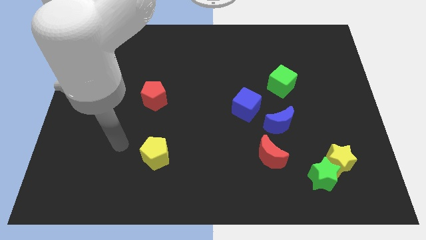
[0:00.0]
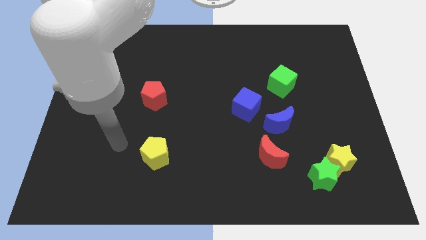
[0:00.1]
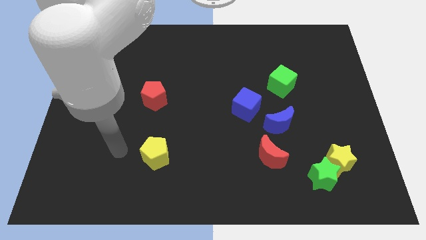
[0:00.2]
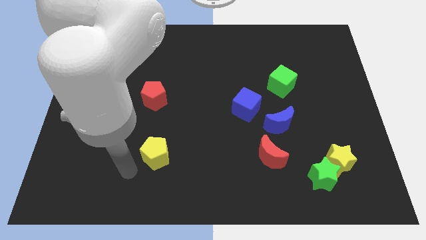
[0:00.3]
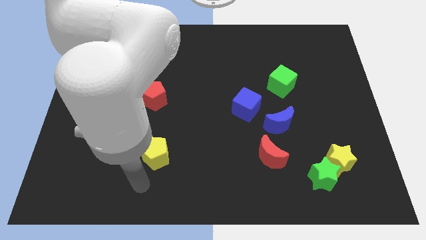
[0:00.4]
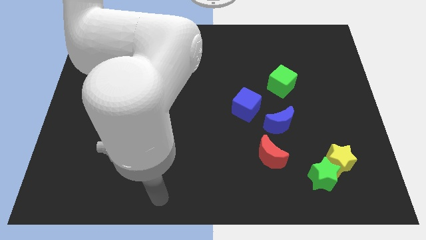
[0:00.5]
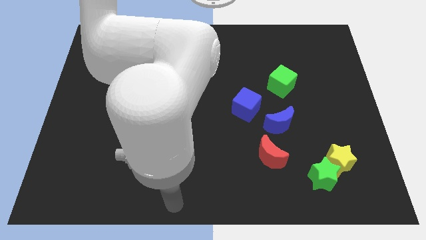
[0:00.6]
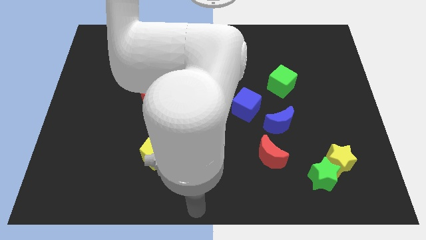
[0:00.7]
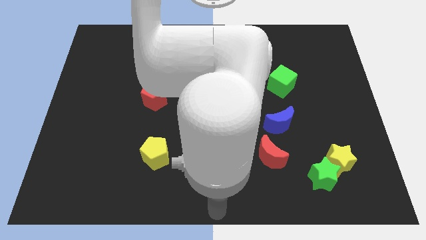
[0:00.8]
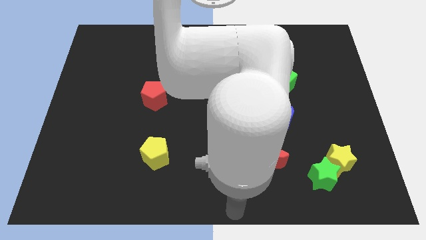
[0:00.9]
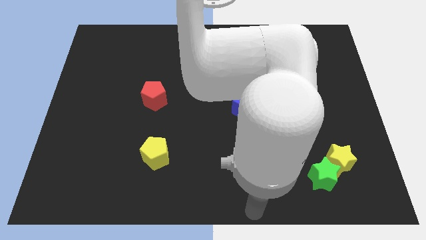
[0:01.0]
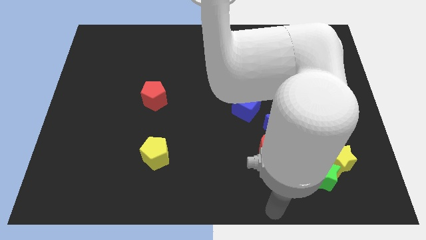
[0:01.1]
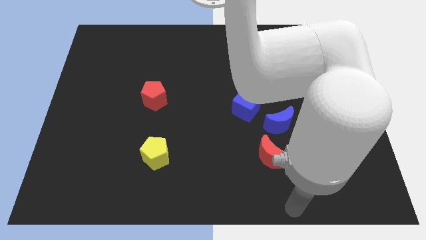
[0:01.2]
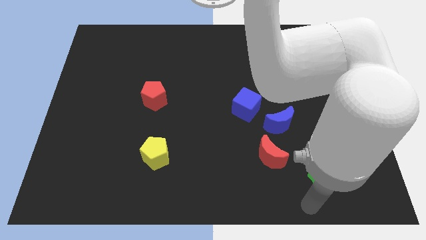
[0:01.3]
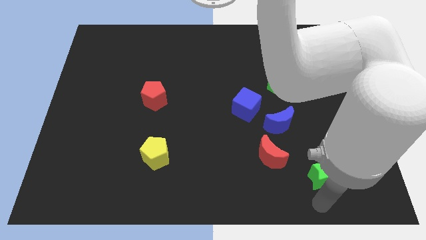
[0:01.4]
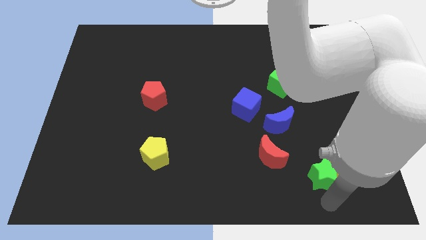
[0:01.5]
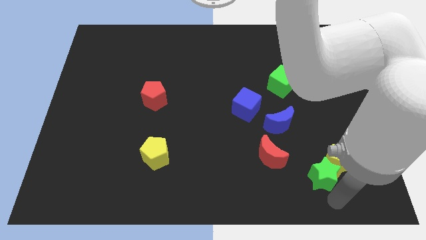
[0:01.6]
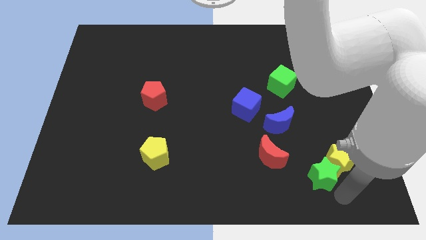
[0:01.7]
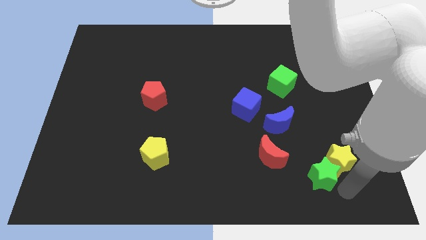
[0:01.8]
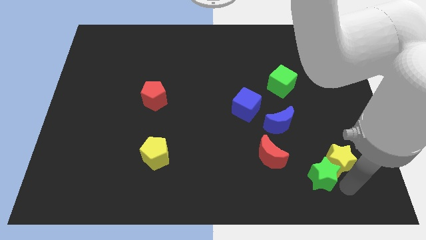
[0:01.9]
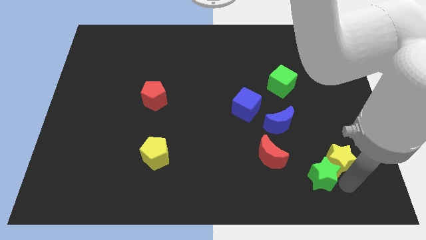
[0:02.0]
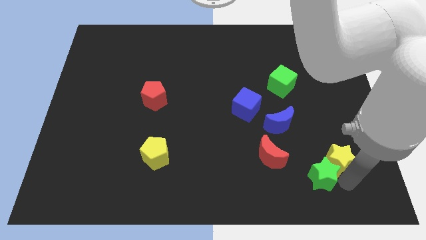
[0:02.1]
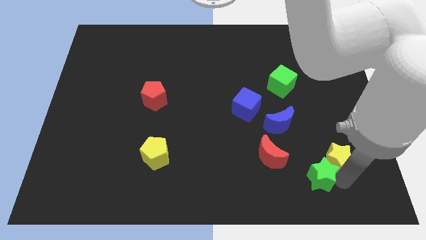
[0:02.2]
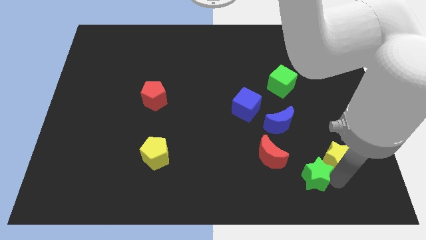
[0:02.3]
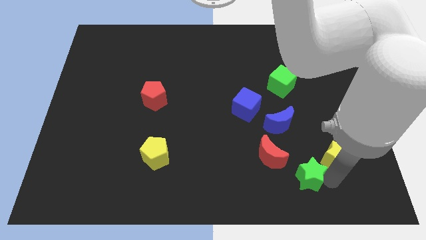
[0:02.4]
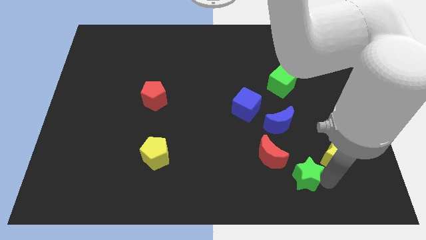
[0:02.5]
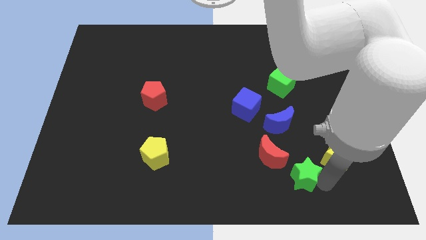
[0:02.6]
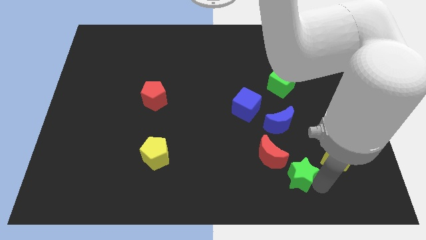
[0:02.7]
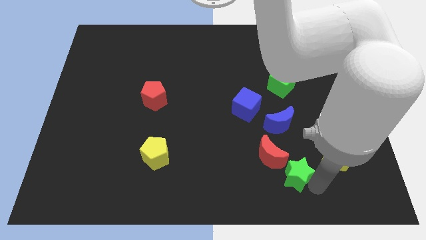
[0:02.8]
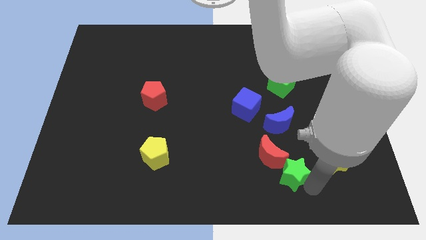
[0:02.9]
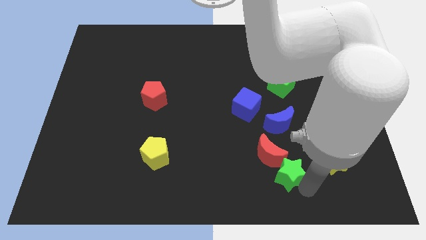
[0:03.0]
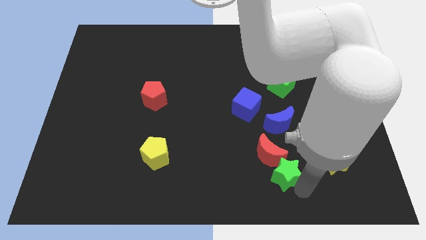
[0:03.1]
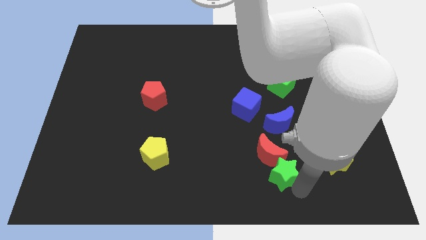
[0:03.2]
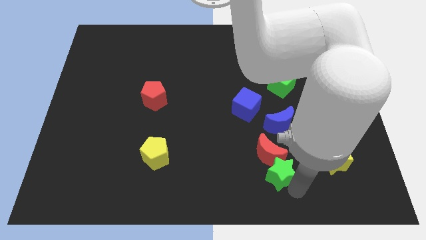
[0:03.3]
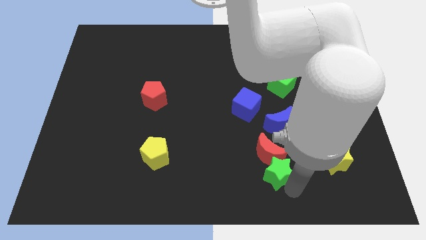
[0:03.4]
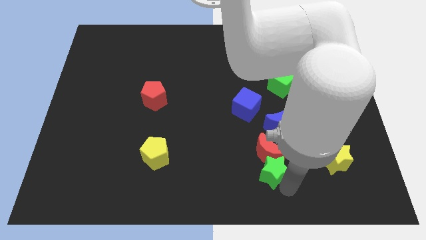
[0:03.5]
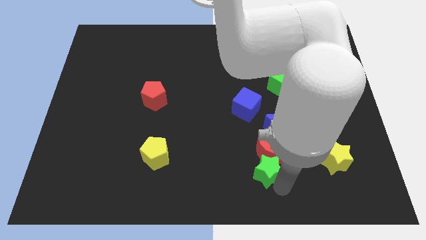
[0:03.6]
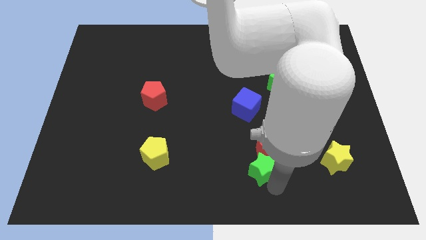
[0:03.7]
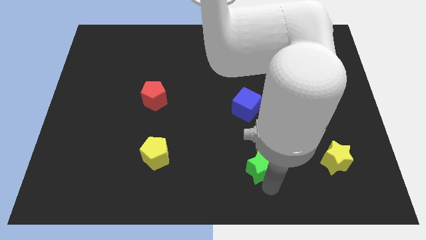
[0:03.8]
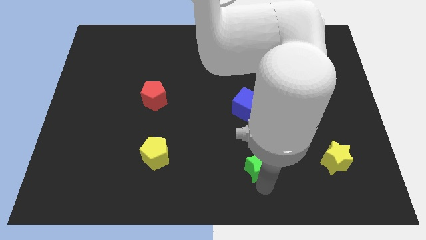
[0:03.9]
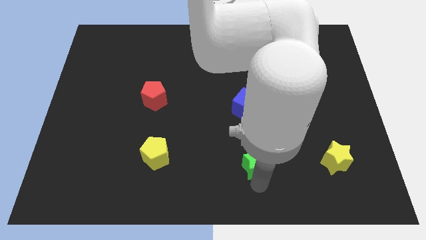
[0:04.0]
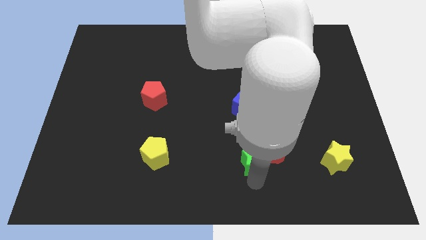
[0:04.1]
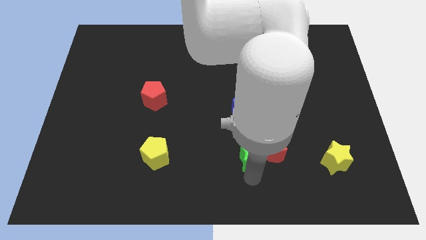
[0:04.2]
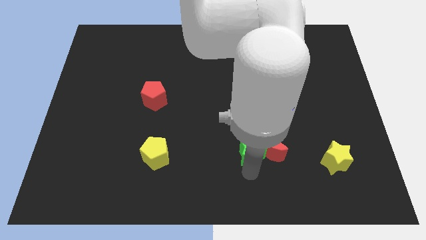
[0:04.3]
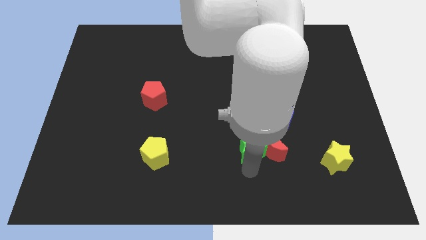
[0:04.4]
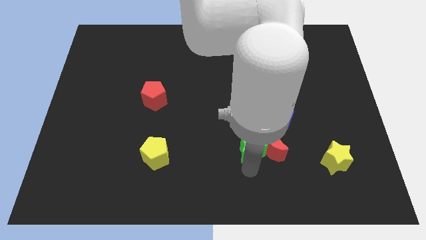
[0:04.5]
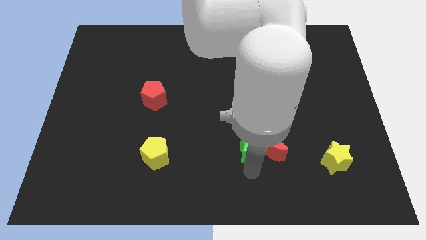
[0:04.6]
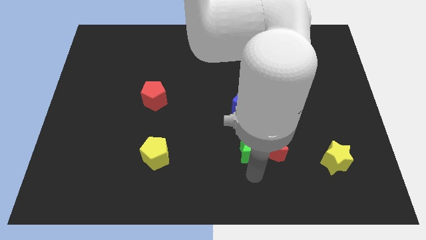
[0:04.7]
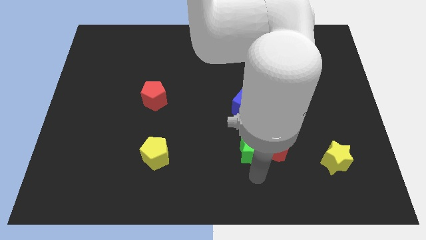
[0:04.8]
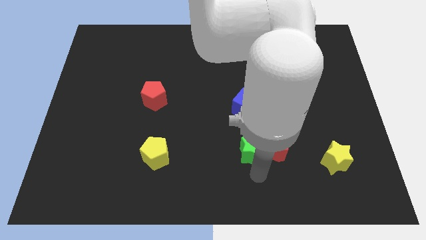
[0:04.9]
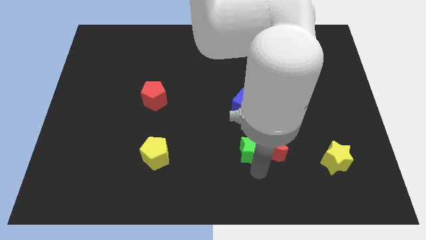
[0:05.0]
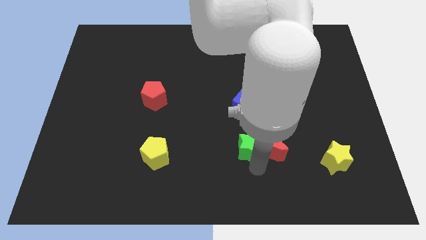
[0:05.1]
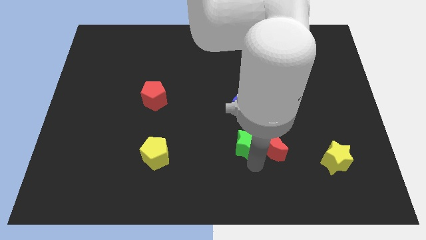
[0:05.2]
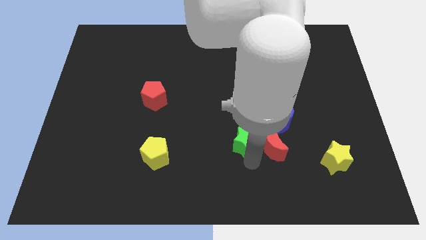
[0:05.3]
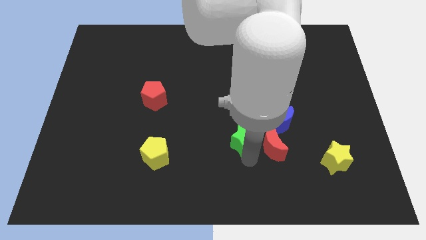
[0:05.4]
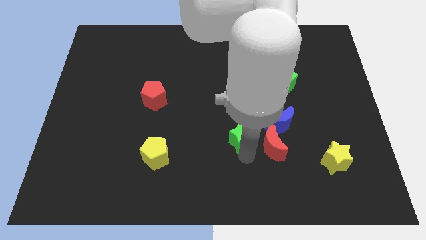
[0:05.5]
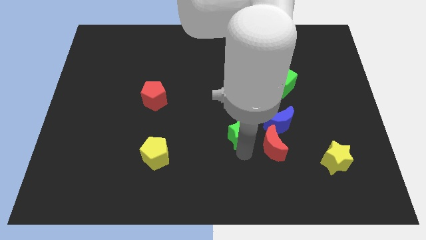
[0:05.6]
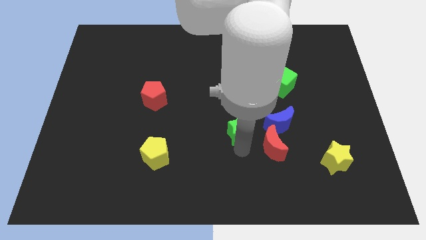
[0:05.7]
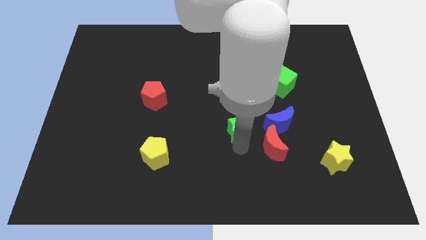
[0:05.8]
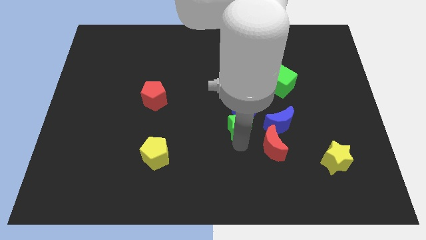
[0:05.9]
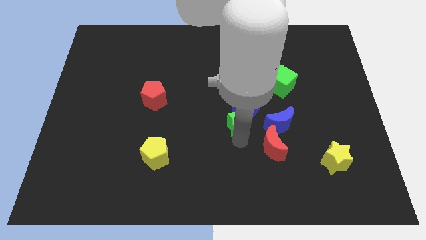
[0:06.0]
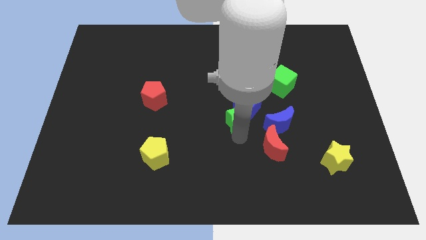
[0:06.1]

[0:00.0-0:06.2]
put the green star next to the blue cube

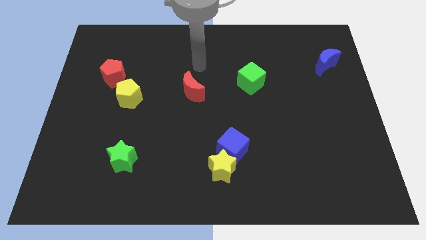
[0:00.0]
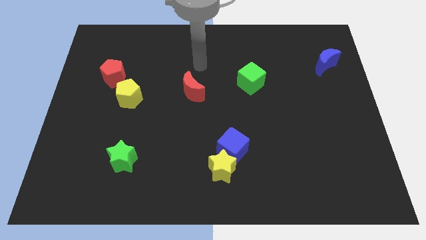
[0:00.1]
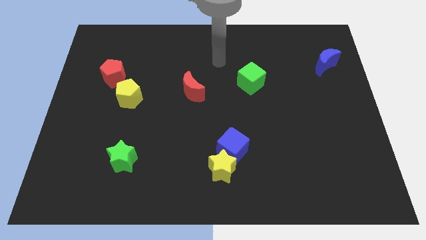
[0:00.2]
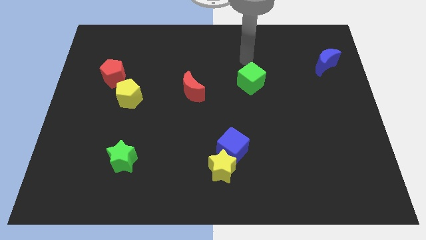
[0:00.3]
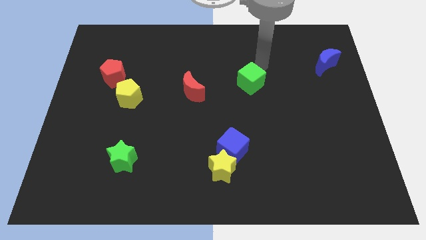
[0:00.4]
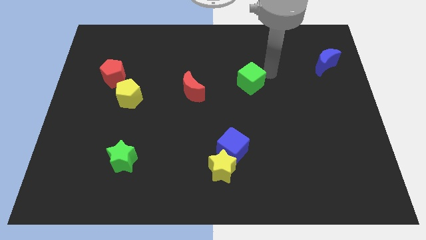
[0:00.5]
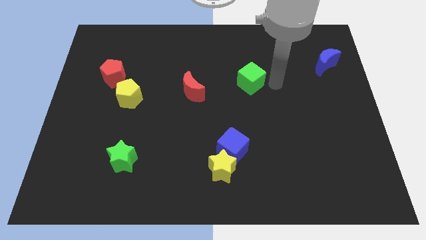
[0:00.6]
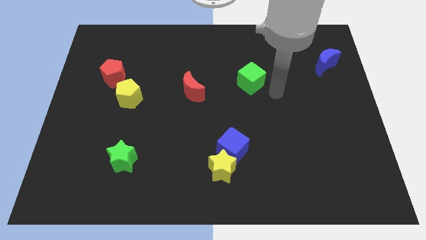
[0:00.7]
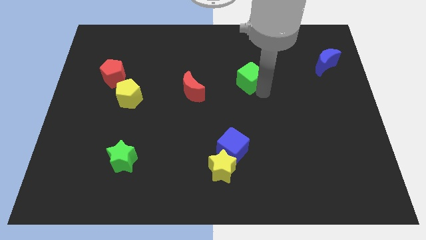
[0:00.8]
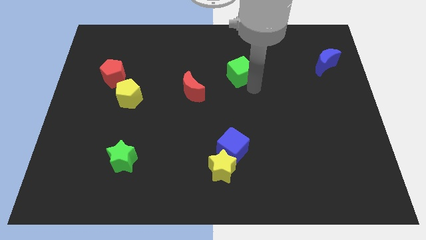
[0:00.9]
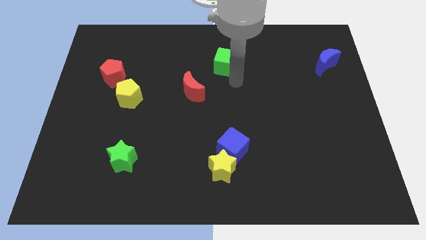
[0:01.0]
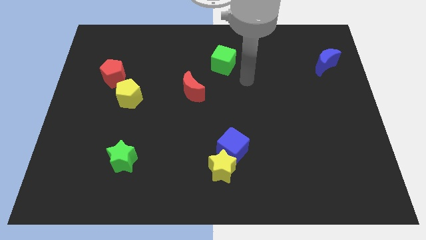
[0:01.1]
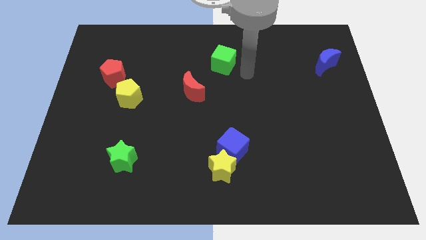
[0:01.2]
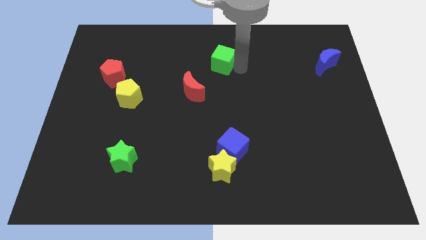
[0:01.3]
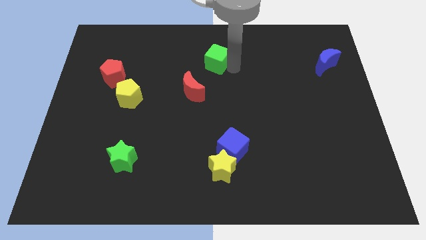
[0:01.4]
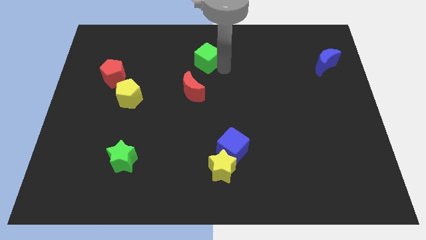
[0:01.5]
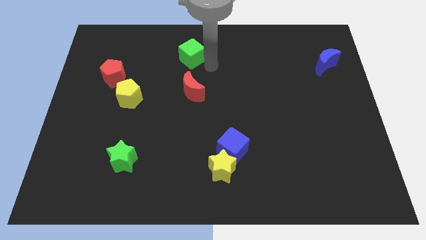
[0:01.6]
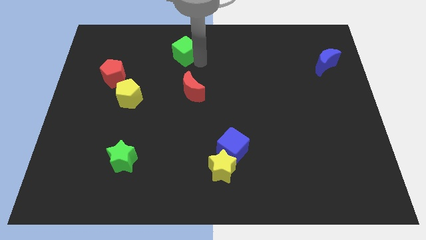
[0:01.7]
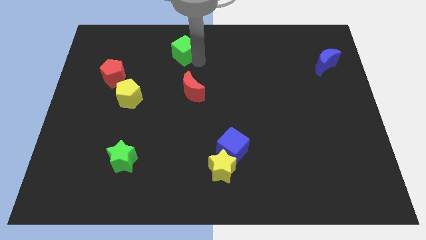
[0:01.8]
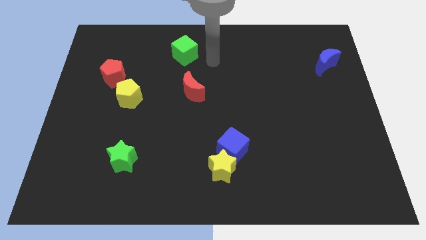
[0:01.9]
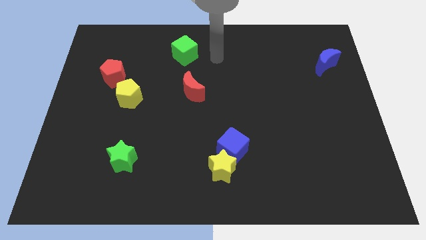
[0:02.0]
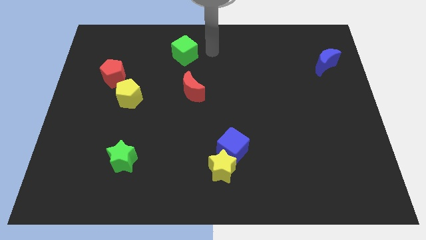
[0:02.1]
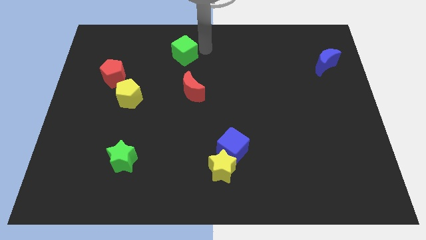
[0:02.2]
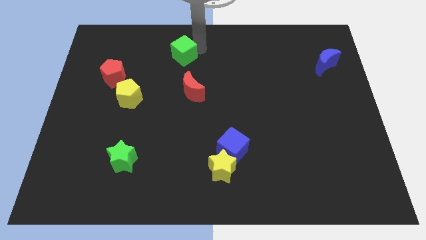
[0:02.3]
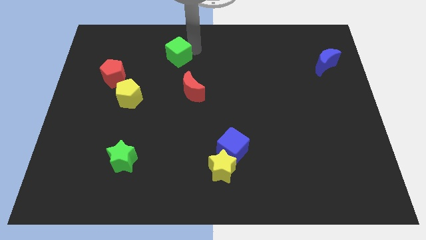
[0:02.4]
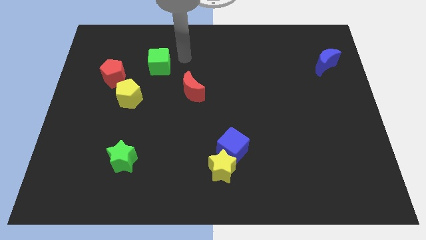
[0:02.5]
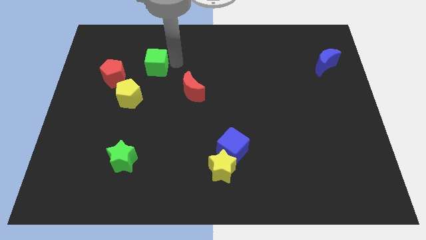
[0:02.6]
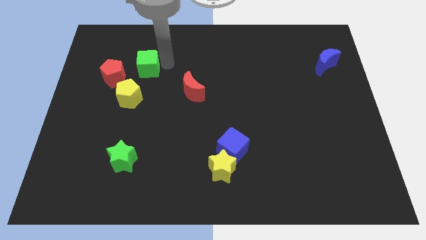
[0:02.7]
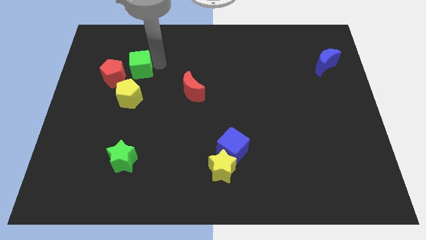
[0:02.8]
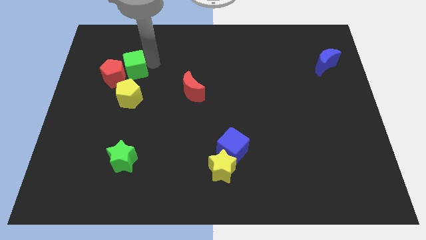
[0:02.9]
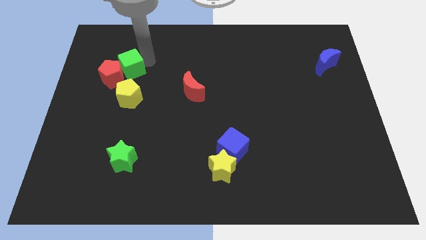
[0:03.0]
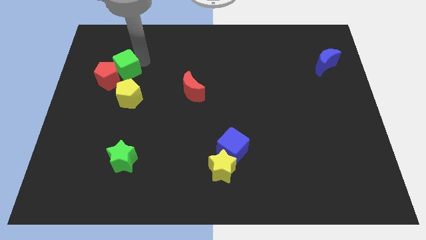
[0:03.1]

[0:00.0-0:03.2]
move the green cube close to the red pentagon
